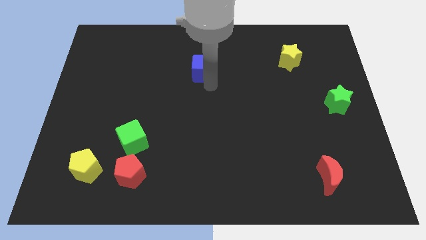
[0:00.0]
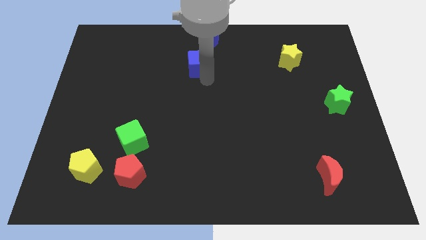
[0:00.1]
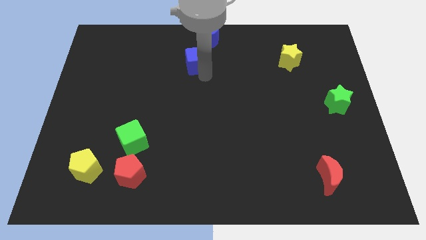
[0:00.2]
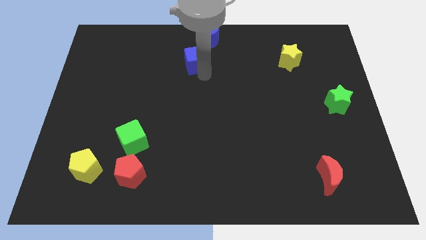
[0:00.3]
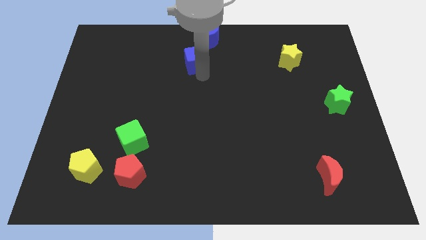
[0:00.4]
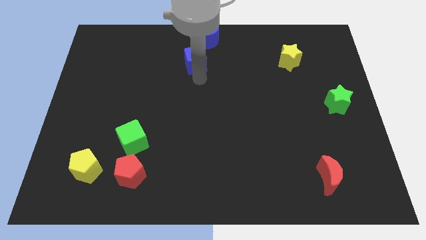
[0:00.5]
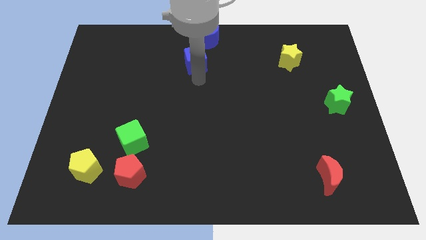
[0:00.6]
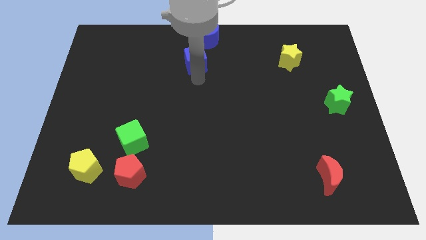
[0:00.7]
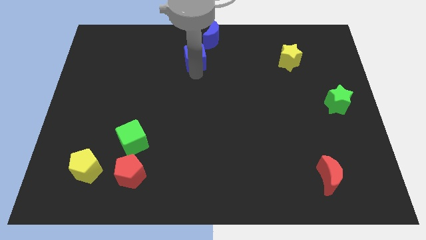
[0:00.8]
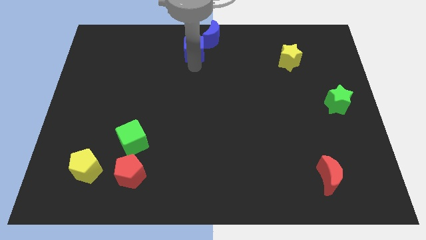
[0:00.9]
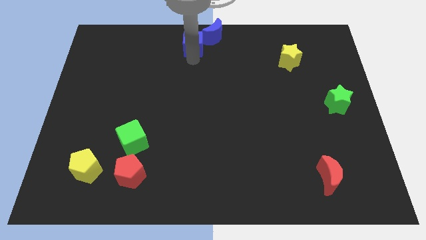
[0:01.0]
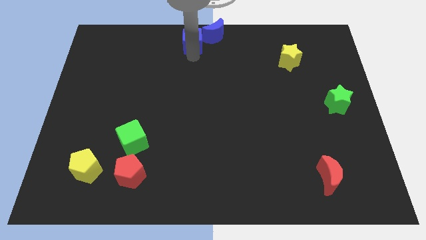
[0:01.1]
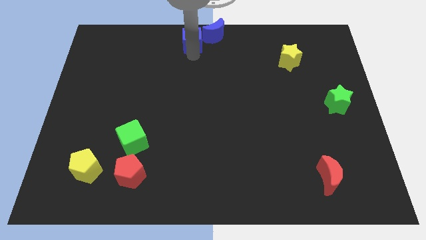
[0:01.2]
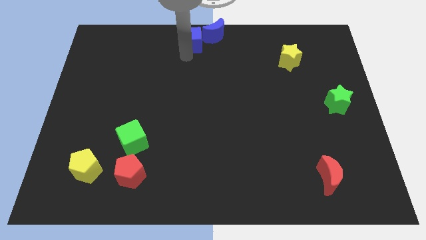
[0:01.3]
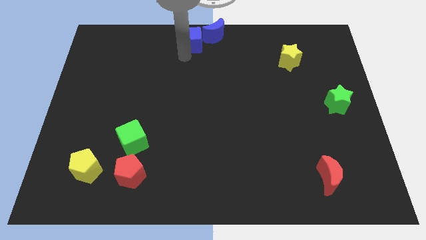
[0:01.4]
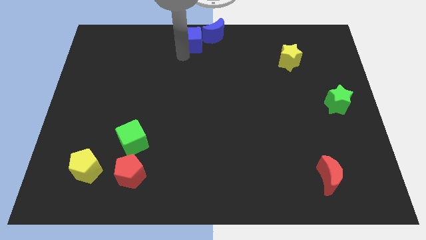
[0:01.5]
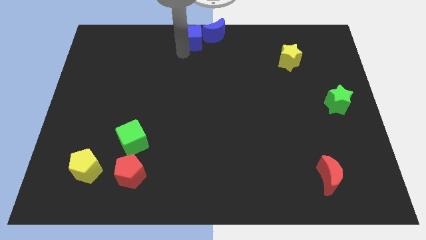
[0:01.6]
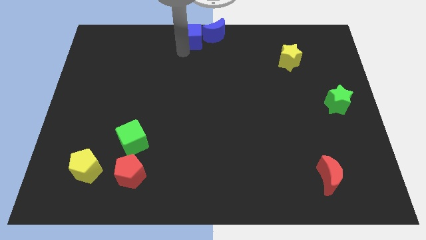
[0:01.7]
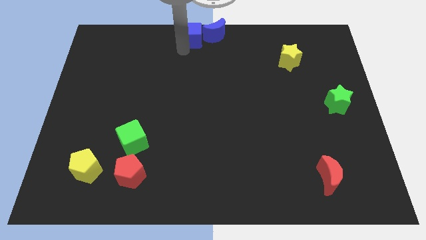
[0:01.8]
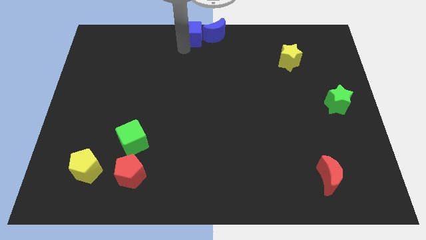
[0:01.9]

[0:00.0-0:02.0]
place blue cube near blue crescent

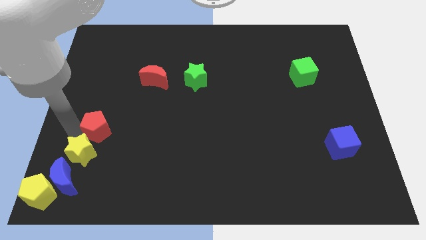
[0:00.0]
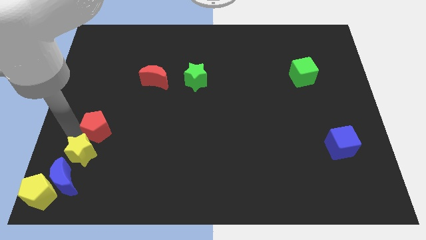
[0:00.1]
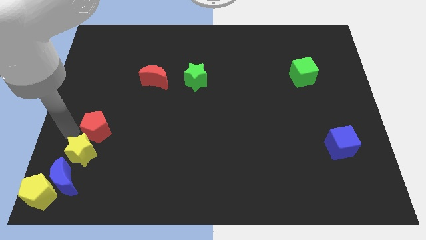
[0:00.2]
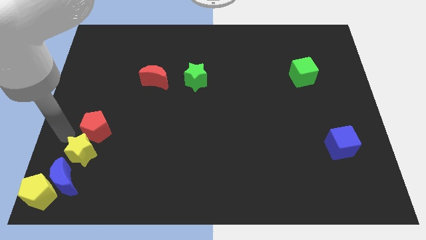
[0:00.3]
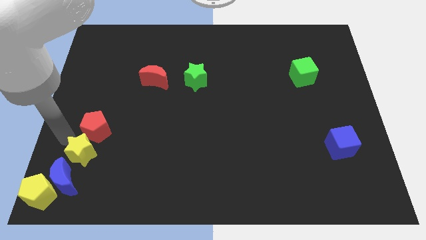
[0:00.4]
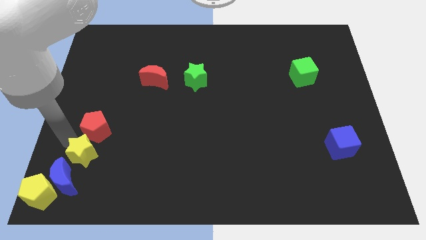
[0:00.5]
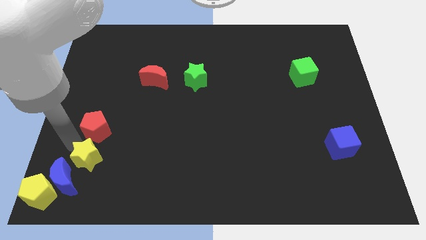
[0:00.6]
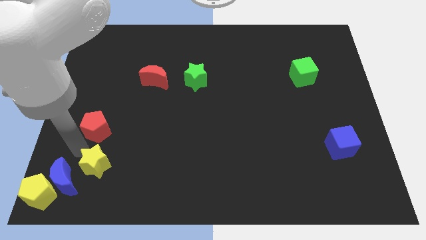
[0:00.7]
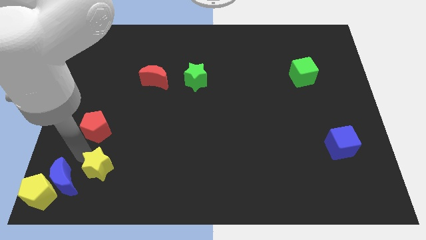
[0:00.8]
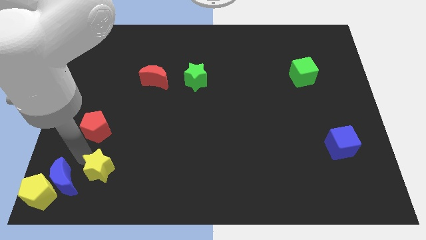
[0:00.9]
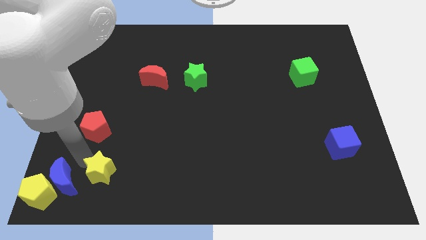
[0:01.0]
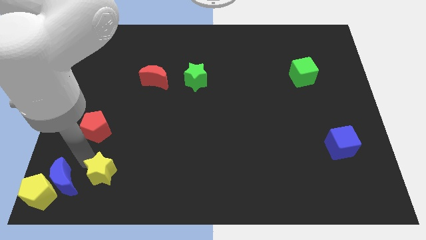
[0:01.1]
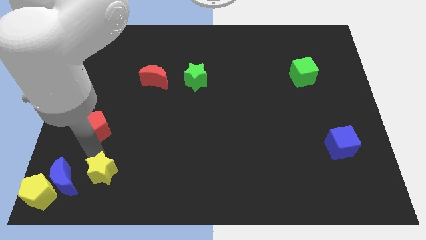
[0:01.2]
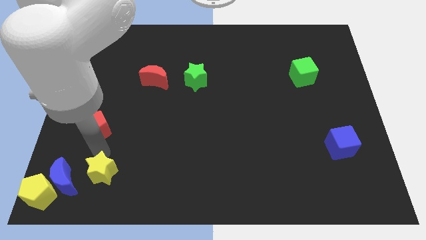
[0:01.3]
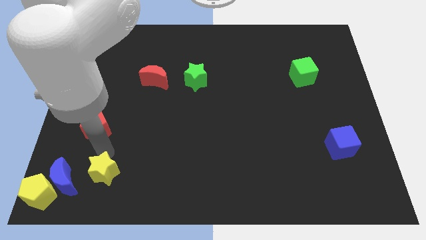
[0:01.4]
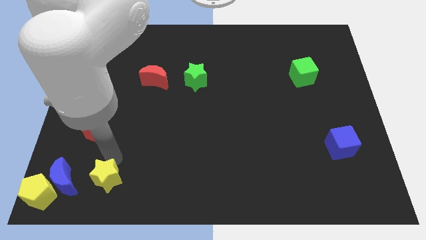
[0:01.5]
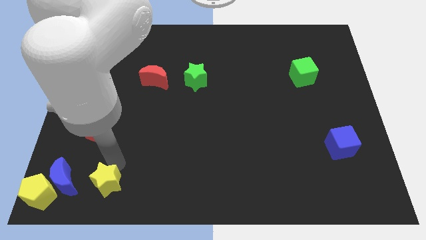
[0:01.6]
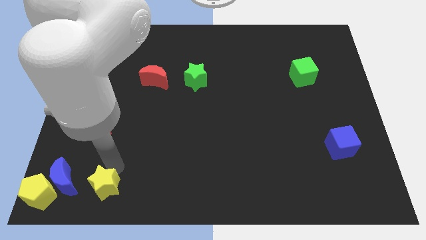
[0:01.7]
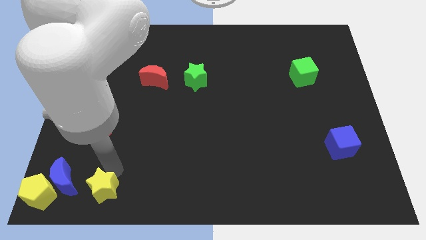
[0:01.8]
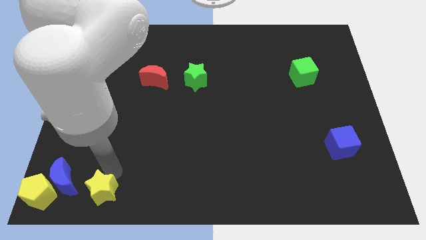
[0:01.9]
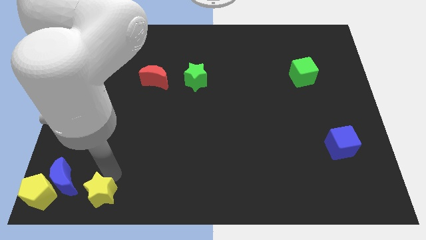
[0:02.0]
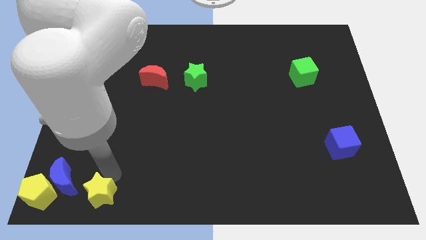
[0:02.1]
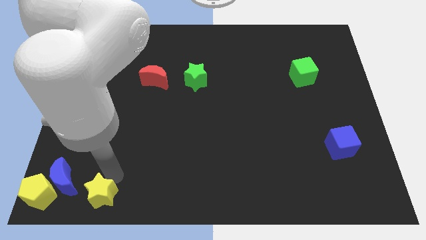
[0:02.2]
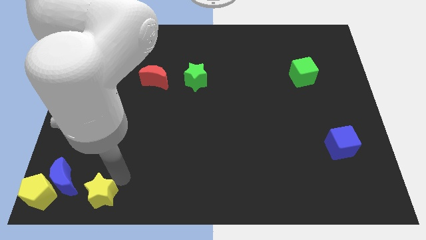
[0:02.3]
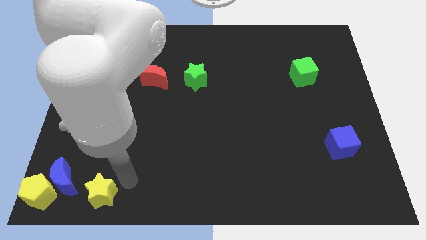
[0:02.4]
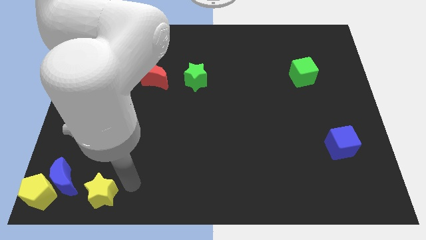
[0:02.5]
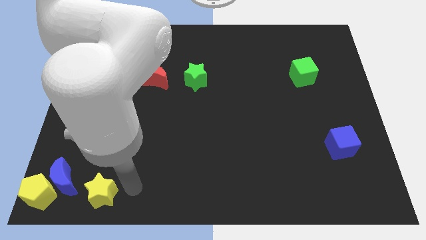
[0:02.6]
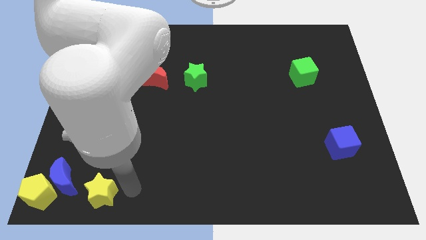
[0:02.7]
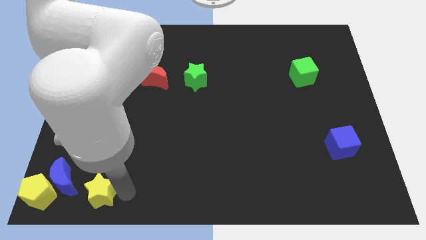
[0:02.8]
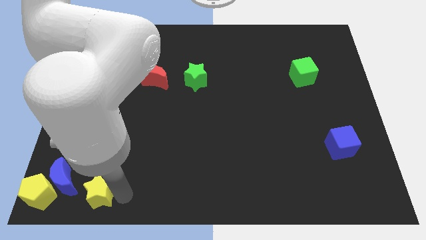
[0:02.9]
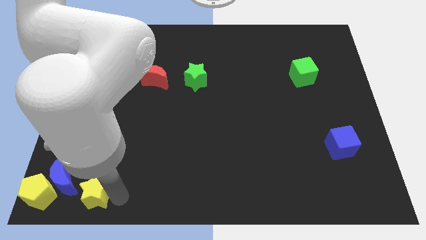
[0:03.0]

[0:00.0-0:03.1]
push the yellow star to the right of the blue crescent

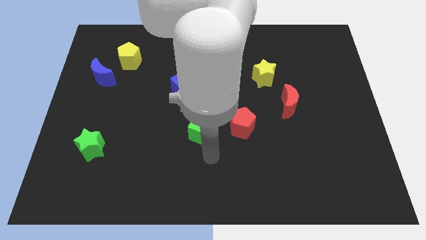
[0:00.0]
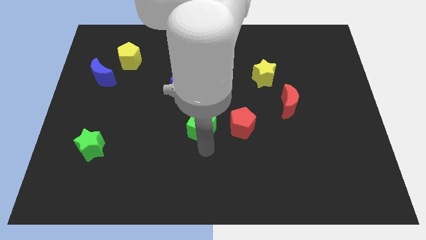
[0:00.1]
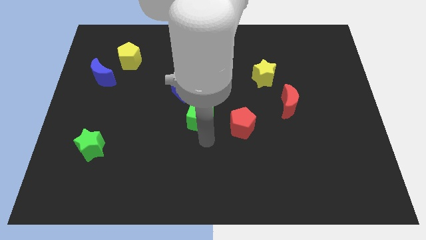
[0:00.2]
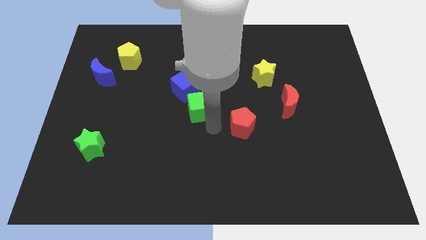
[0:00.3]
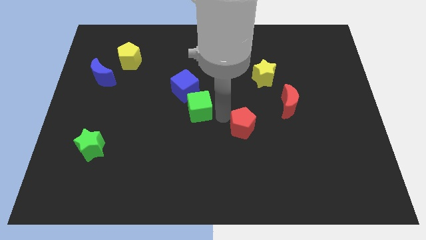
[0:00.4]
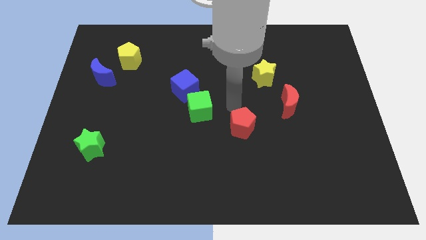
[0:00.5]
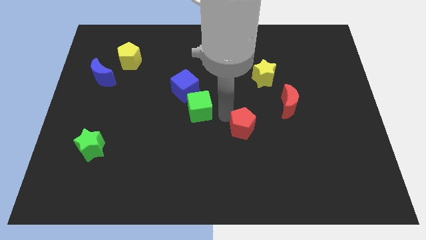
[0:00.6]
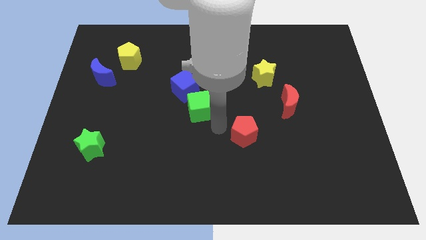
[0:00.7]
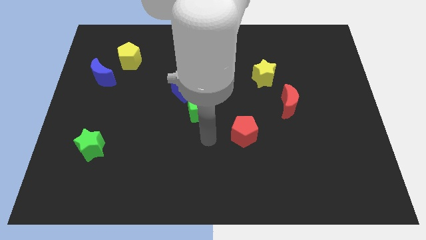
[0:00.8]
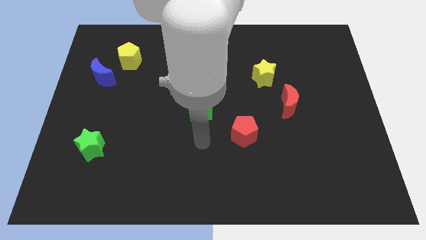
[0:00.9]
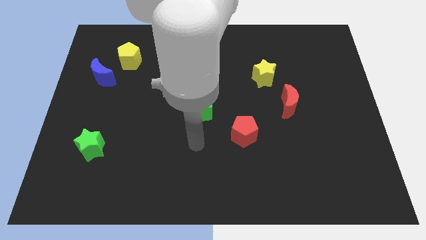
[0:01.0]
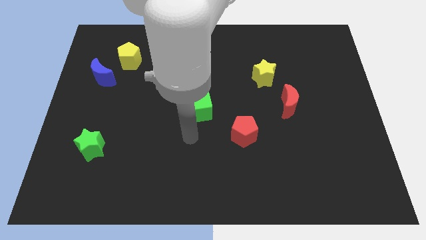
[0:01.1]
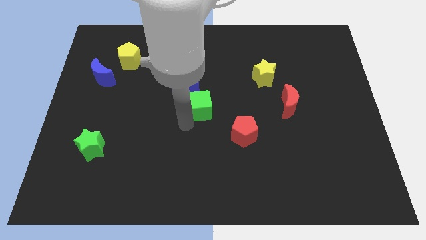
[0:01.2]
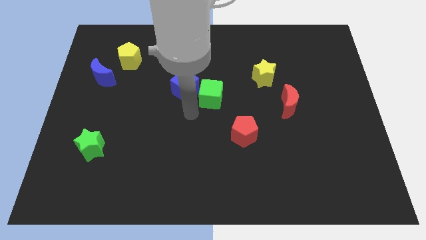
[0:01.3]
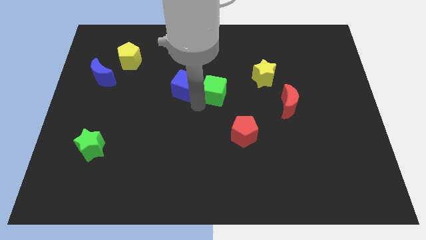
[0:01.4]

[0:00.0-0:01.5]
place the green cube towards the blue cube

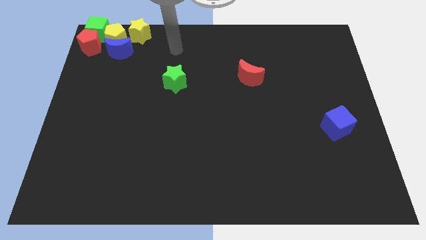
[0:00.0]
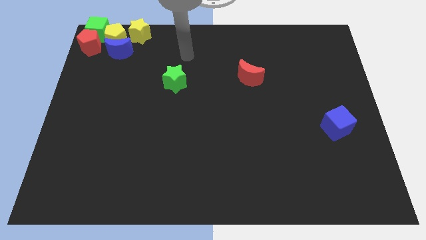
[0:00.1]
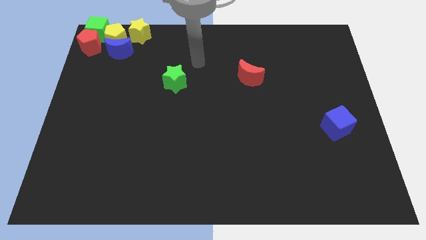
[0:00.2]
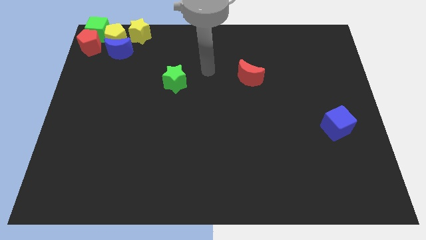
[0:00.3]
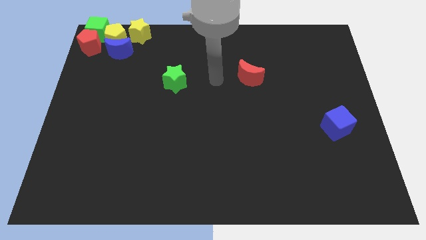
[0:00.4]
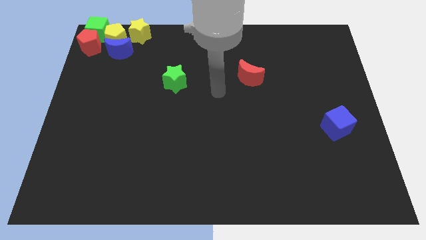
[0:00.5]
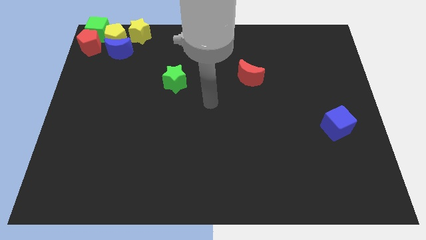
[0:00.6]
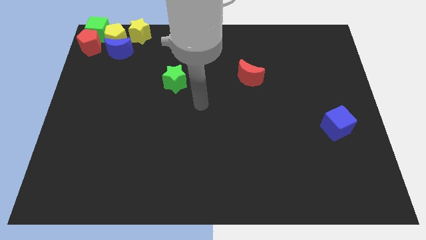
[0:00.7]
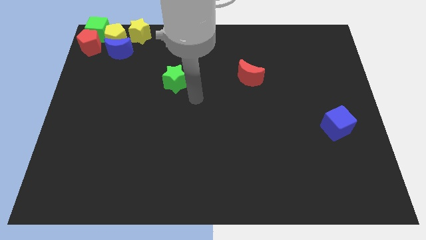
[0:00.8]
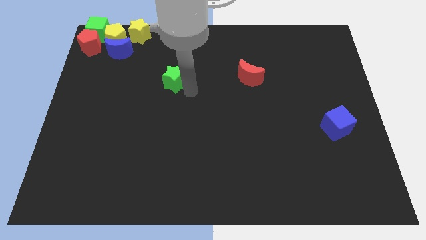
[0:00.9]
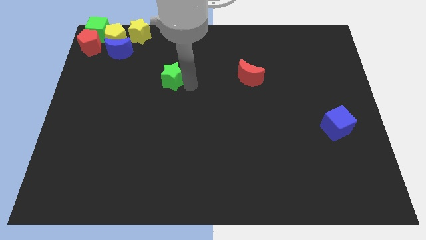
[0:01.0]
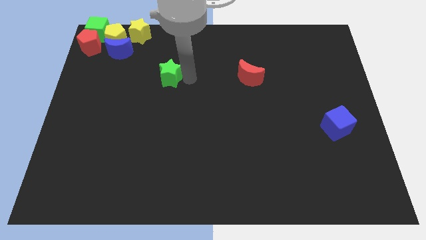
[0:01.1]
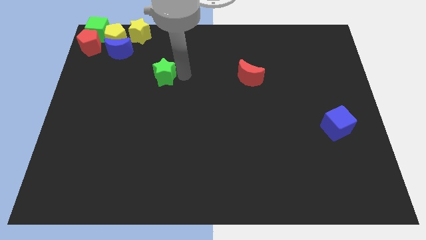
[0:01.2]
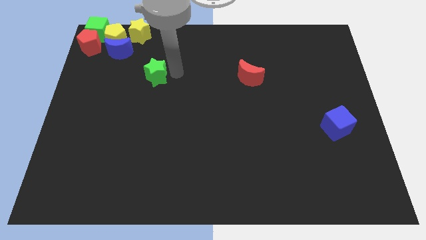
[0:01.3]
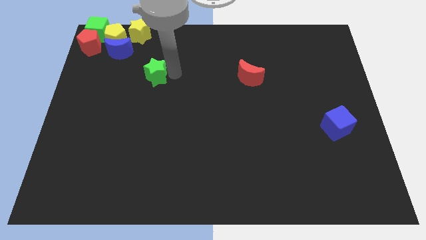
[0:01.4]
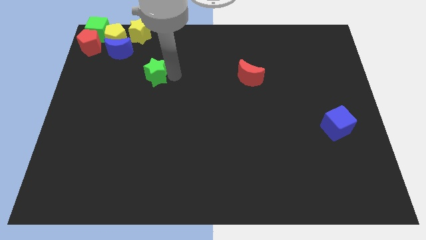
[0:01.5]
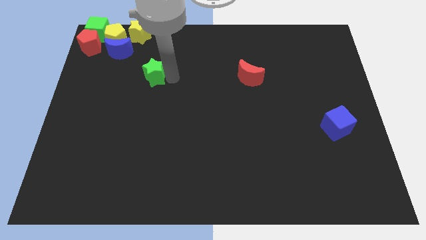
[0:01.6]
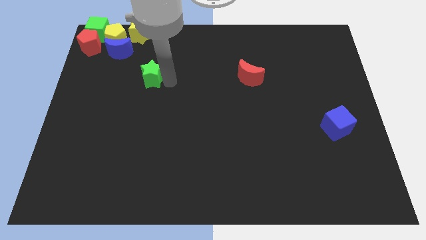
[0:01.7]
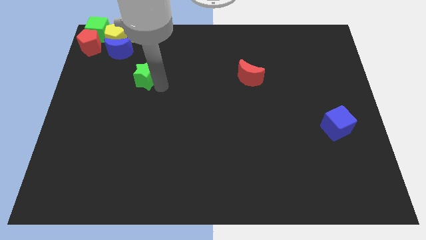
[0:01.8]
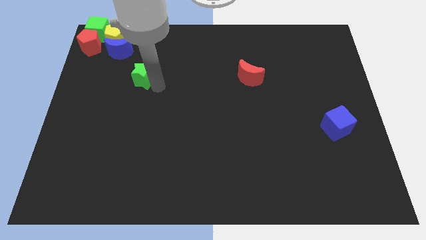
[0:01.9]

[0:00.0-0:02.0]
move the green star to the bottom right of the blue moon

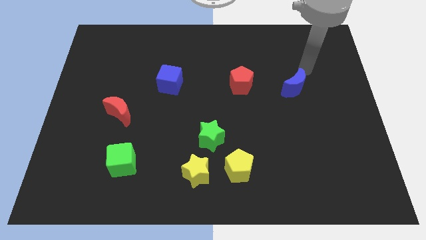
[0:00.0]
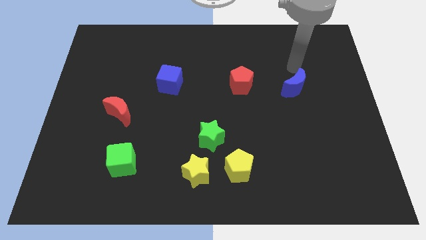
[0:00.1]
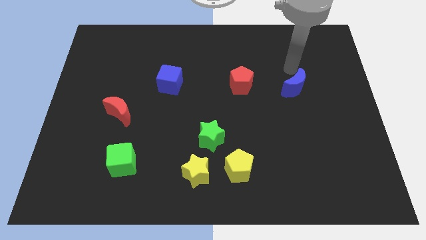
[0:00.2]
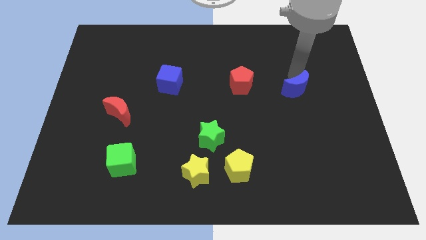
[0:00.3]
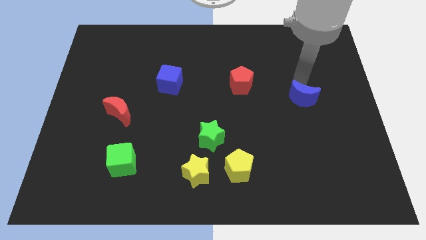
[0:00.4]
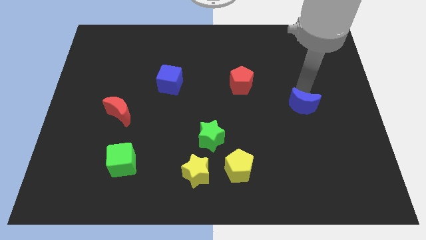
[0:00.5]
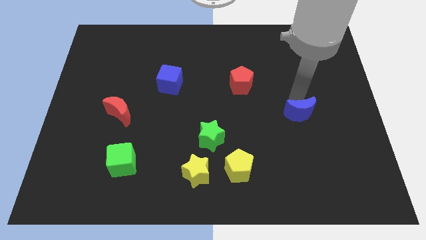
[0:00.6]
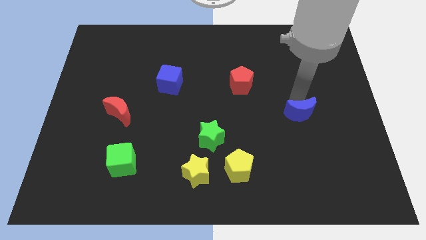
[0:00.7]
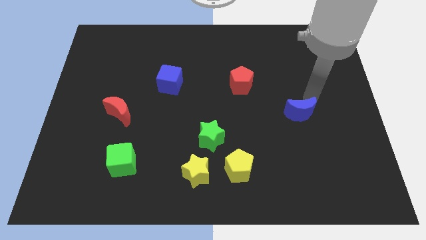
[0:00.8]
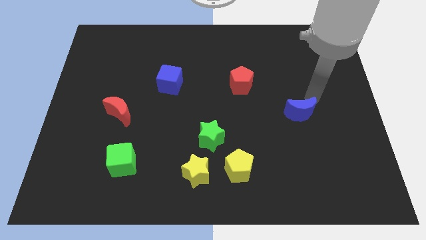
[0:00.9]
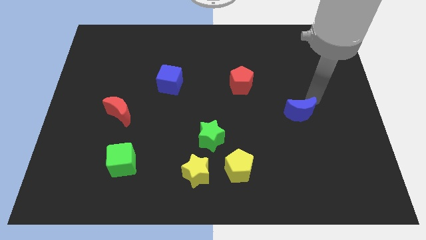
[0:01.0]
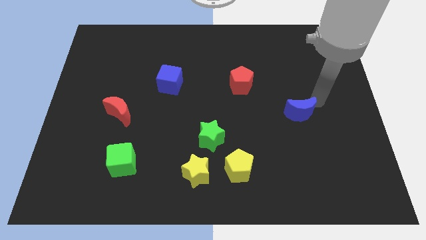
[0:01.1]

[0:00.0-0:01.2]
move the blue crescent to the bottom
